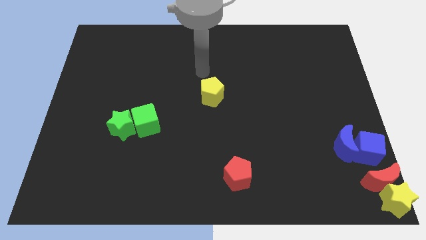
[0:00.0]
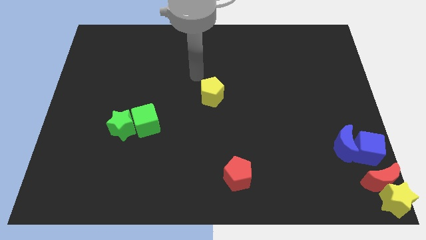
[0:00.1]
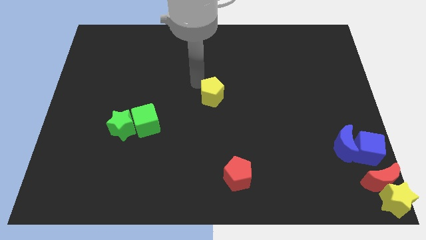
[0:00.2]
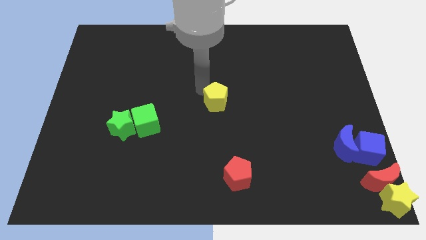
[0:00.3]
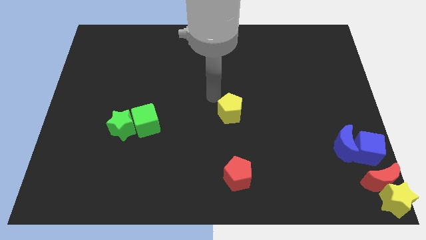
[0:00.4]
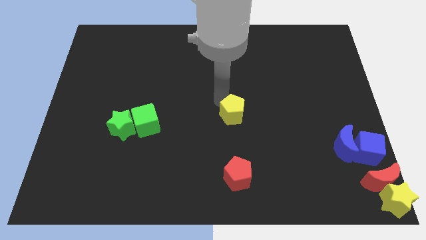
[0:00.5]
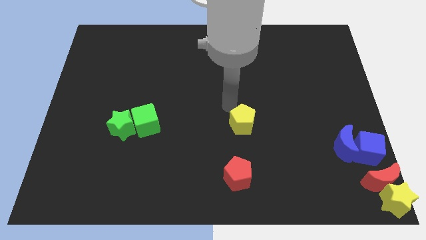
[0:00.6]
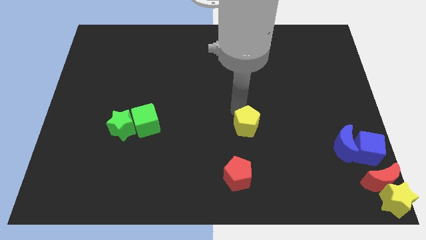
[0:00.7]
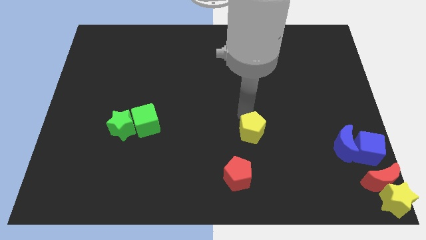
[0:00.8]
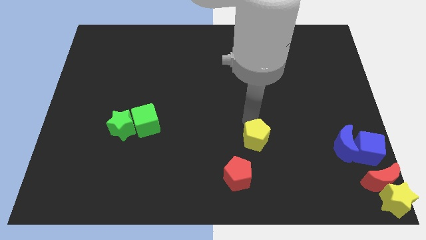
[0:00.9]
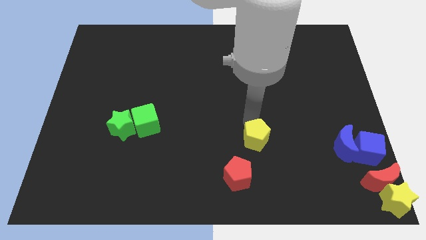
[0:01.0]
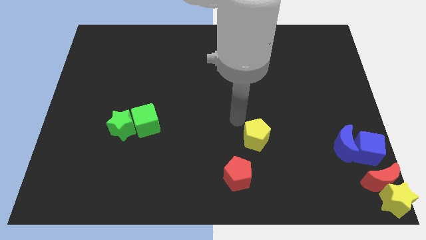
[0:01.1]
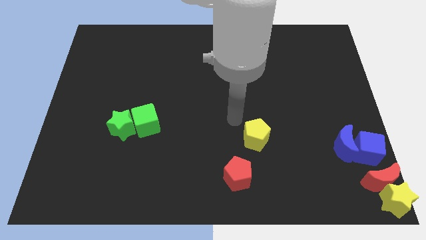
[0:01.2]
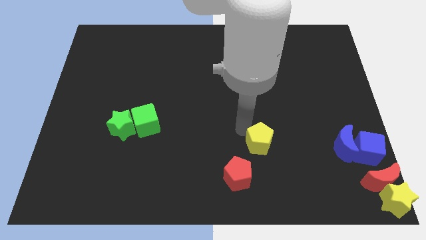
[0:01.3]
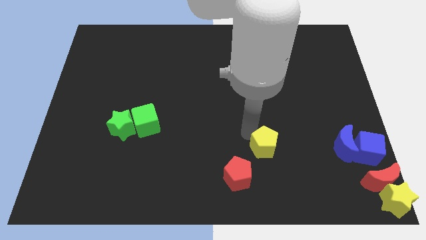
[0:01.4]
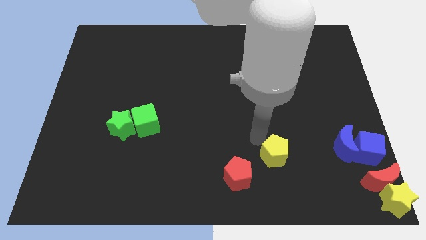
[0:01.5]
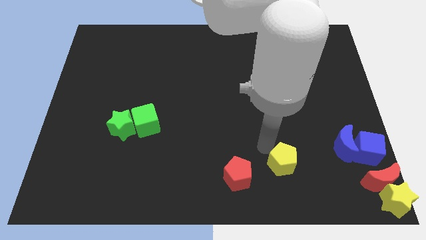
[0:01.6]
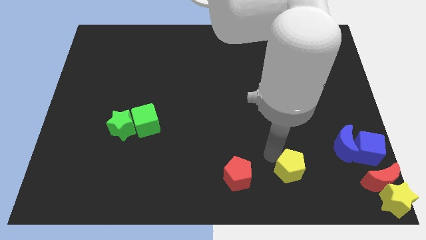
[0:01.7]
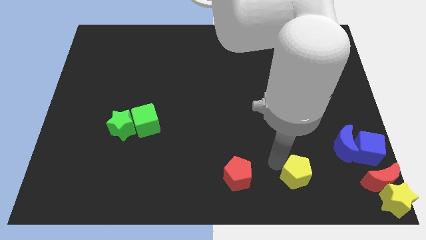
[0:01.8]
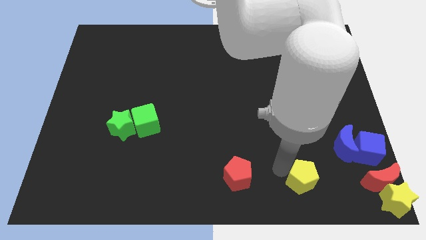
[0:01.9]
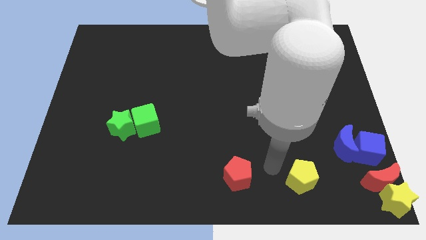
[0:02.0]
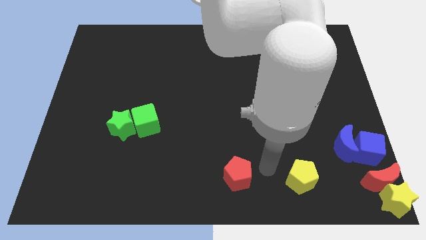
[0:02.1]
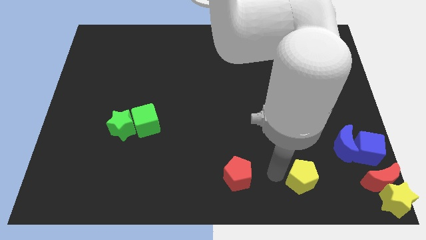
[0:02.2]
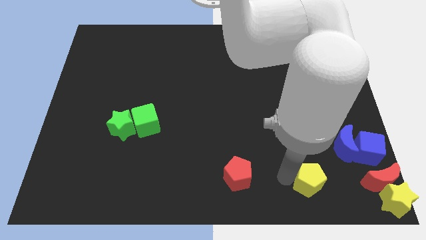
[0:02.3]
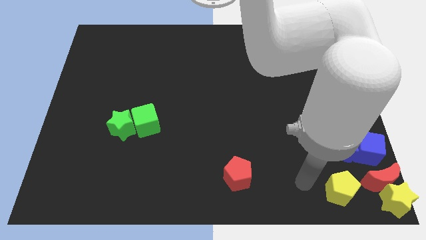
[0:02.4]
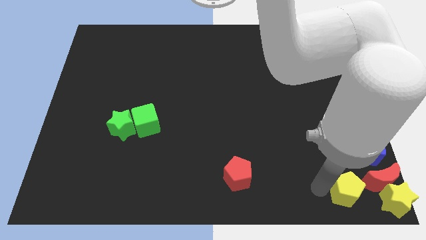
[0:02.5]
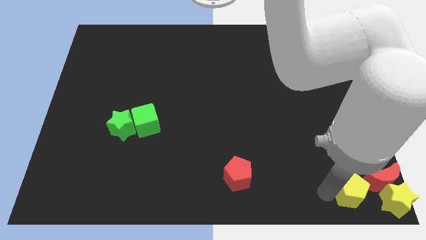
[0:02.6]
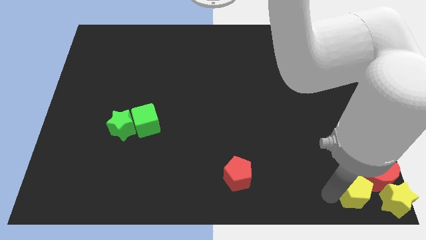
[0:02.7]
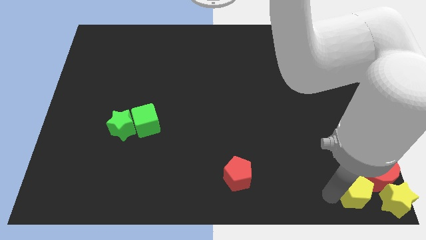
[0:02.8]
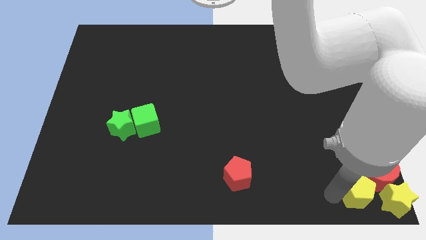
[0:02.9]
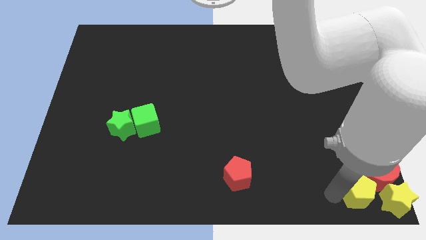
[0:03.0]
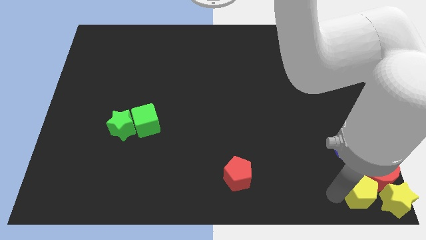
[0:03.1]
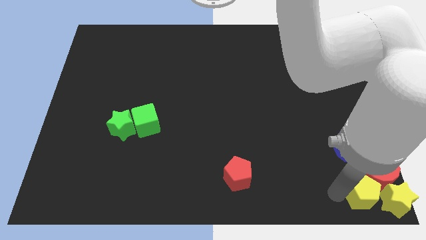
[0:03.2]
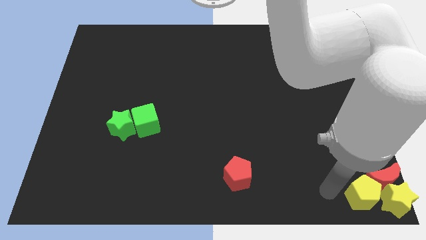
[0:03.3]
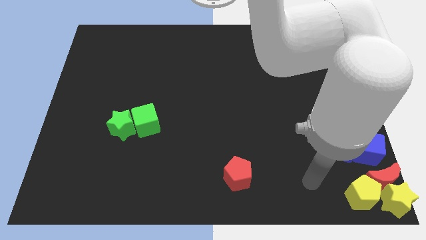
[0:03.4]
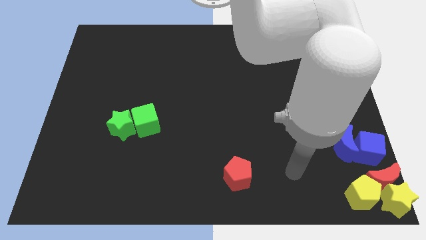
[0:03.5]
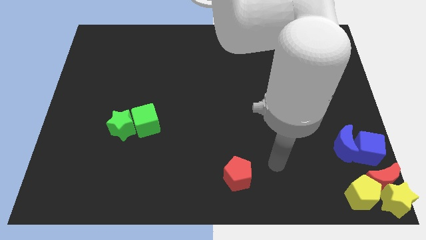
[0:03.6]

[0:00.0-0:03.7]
place the yellow pentagon to the left of the yellow star

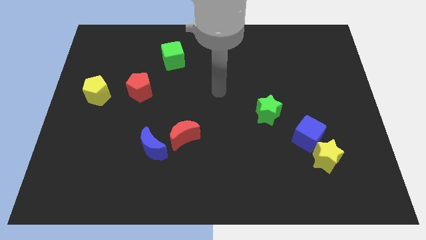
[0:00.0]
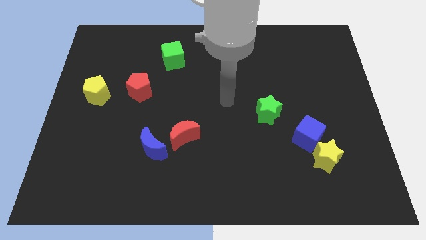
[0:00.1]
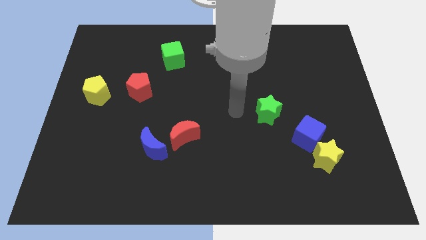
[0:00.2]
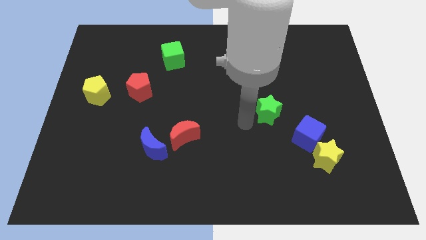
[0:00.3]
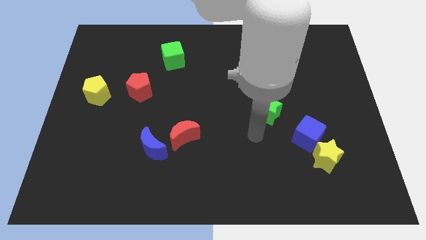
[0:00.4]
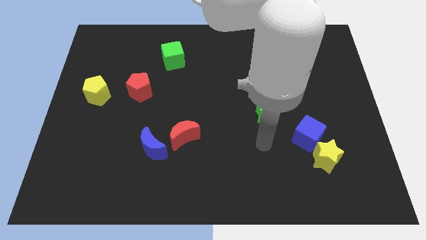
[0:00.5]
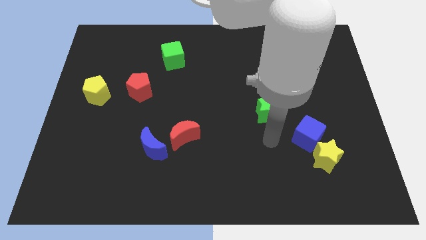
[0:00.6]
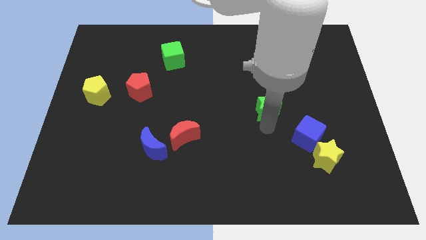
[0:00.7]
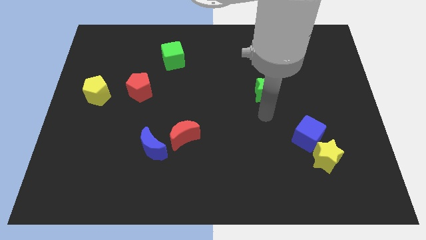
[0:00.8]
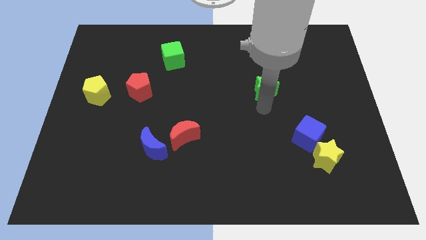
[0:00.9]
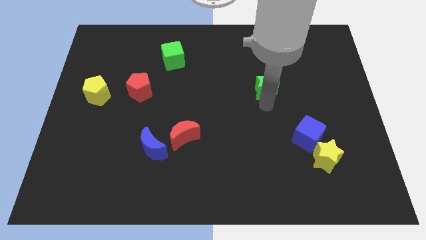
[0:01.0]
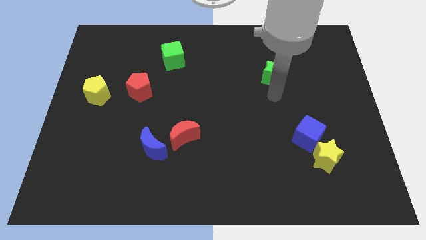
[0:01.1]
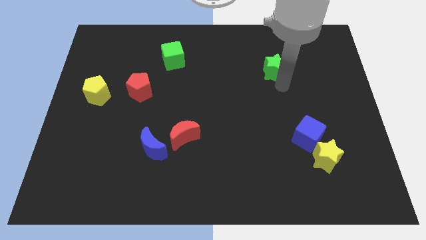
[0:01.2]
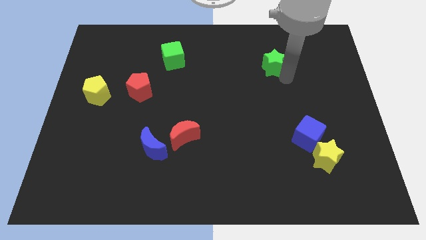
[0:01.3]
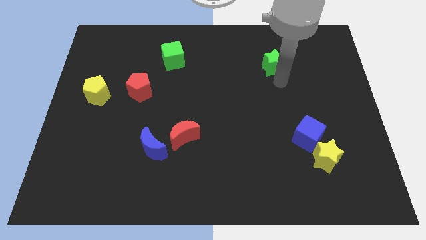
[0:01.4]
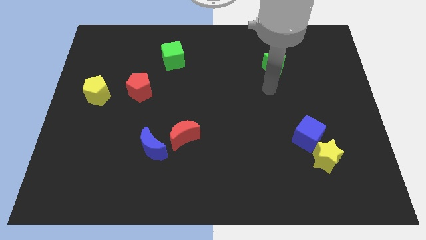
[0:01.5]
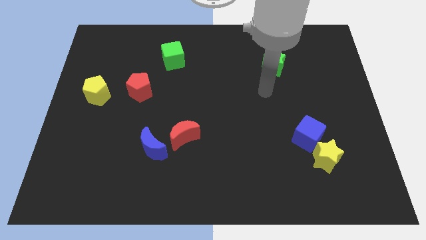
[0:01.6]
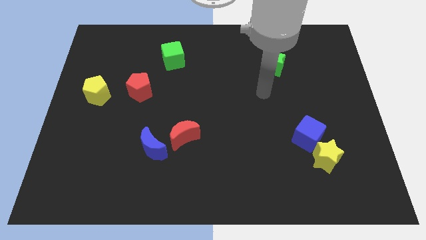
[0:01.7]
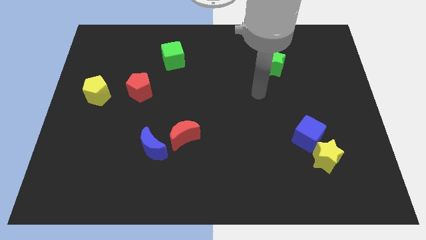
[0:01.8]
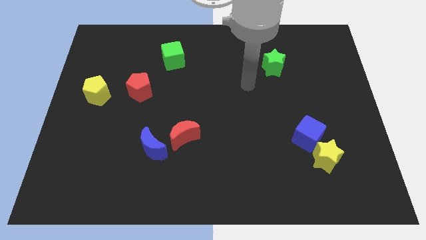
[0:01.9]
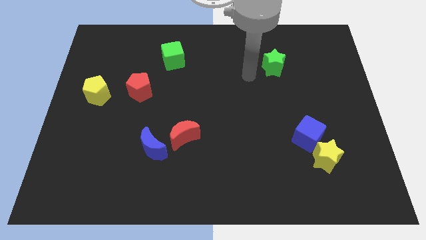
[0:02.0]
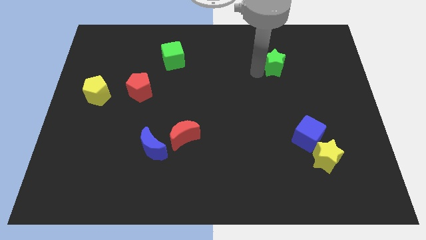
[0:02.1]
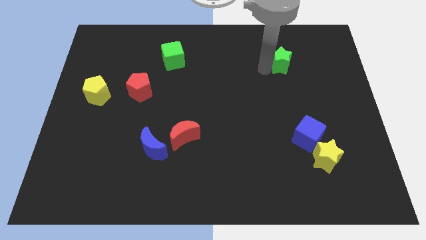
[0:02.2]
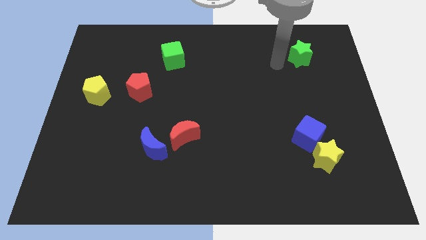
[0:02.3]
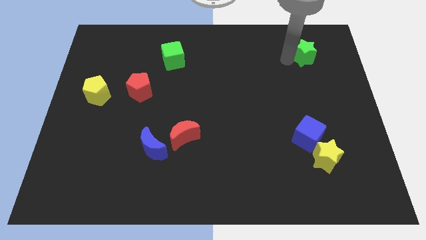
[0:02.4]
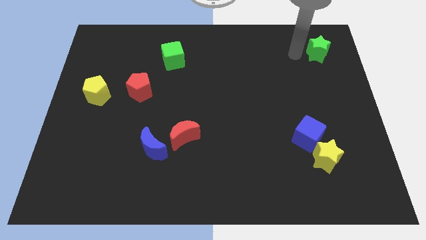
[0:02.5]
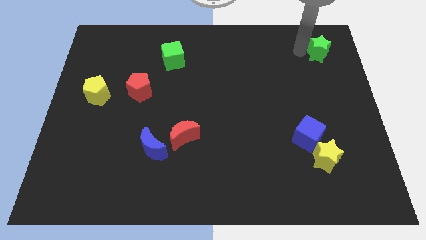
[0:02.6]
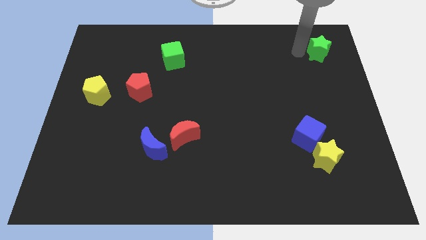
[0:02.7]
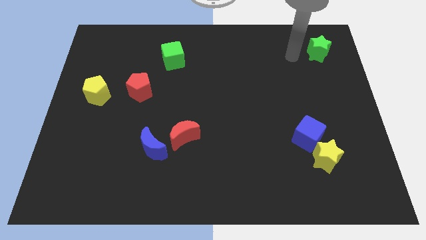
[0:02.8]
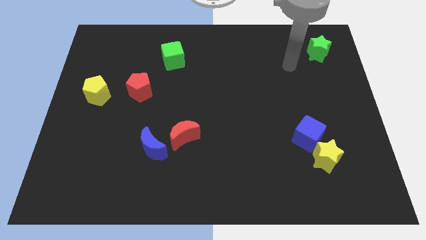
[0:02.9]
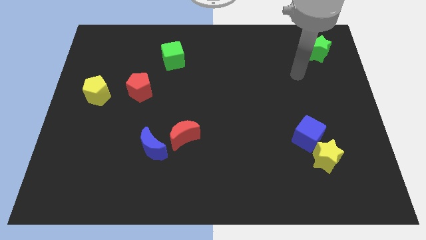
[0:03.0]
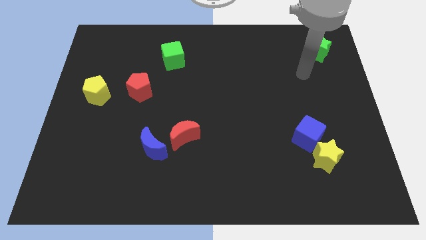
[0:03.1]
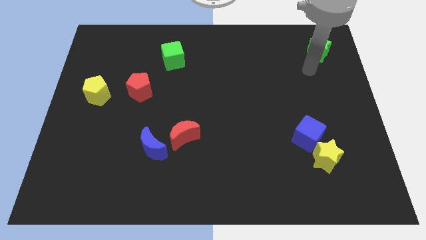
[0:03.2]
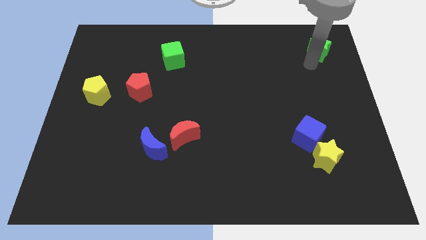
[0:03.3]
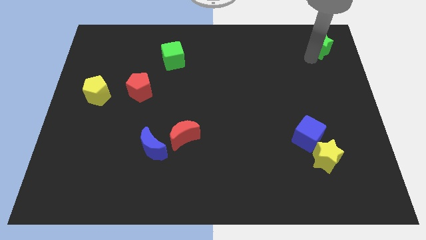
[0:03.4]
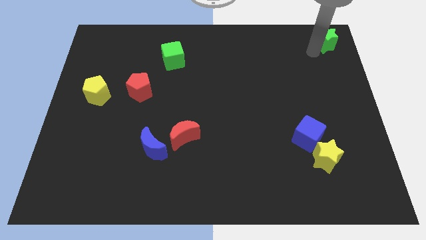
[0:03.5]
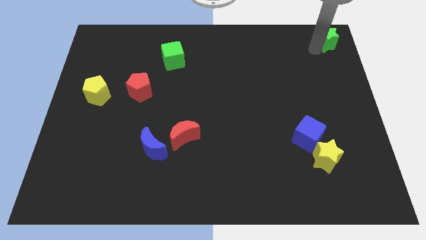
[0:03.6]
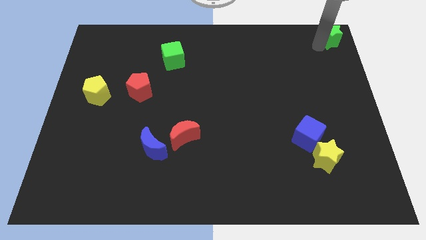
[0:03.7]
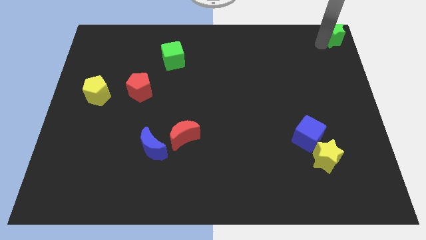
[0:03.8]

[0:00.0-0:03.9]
move the green star diagonally top right to the blue cube

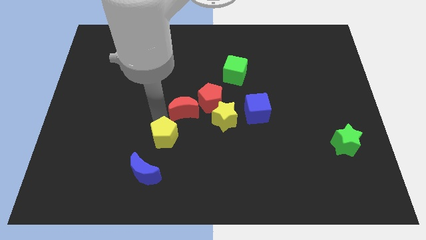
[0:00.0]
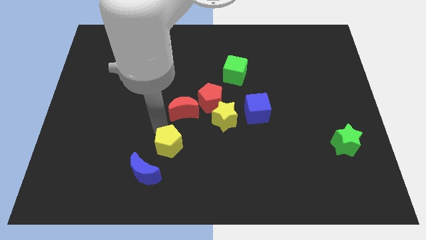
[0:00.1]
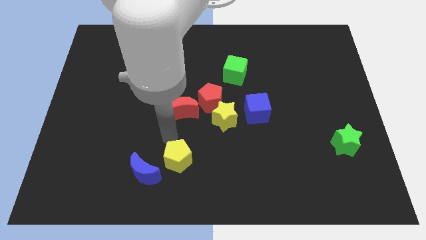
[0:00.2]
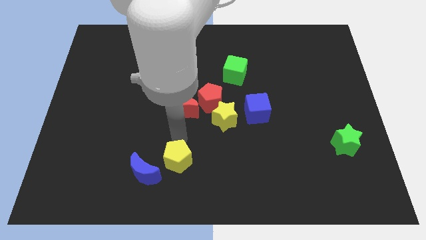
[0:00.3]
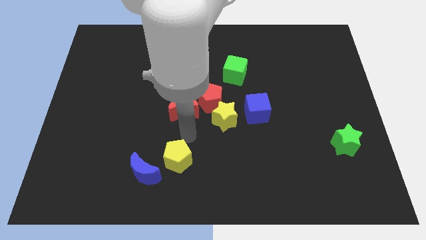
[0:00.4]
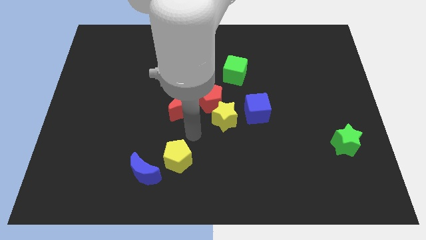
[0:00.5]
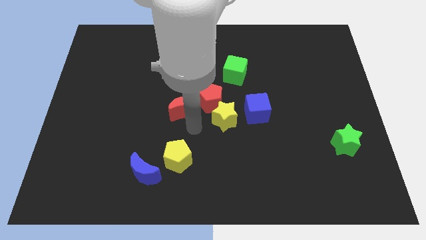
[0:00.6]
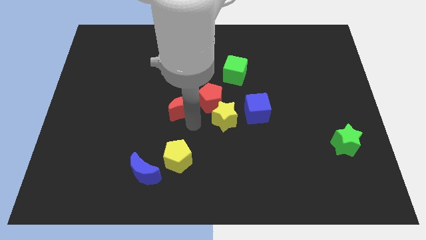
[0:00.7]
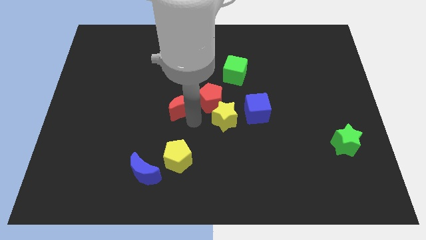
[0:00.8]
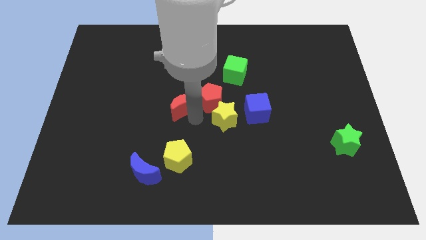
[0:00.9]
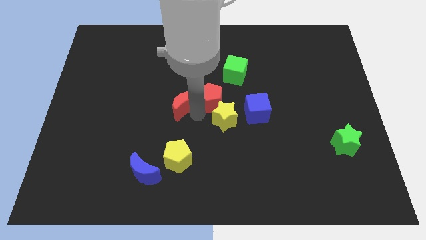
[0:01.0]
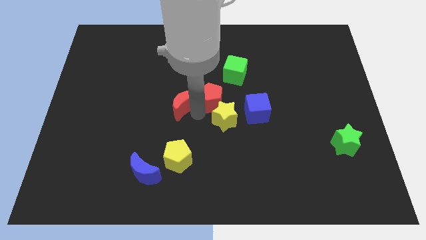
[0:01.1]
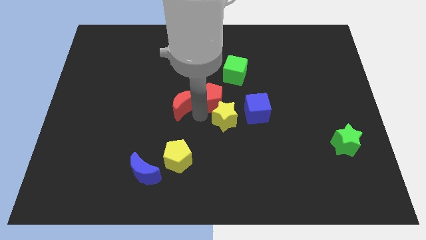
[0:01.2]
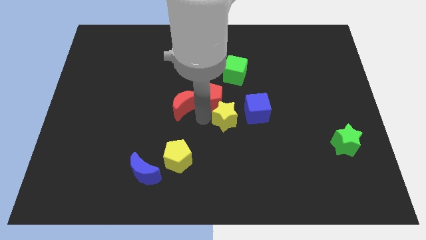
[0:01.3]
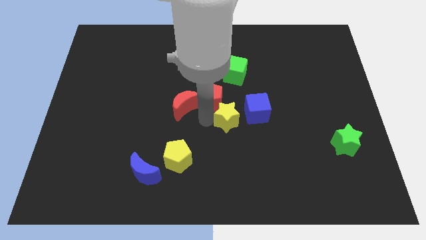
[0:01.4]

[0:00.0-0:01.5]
separate the red moon and the yellow pentagon
